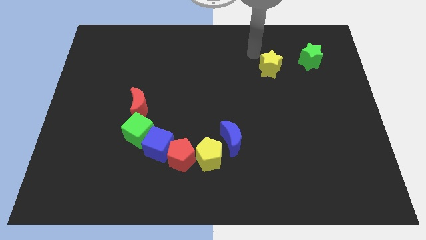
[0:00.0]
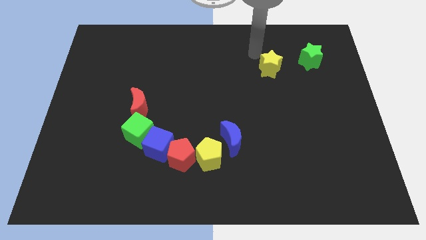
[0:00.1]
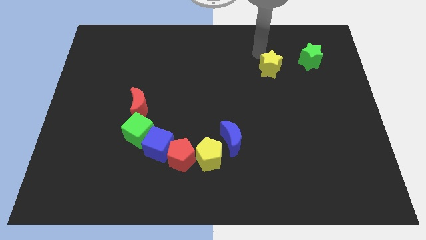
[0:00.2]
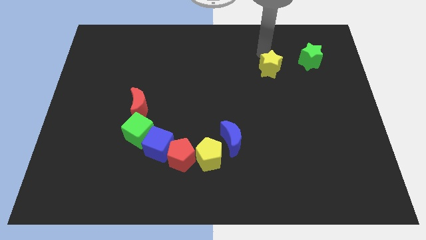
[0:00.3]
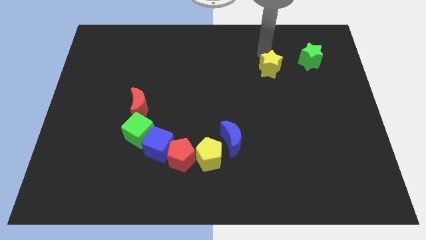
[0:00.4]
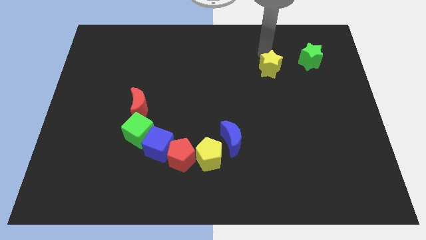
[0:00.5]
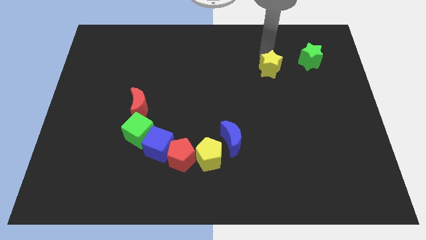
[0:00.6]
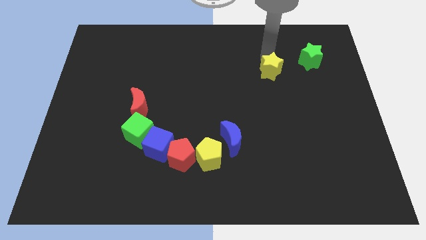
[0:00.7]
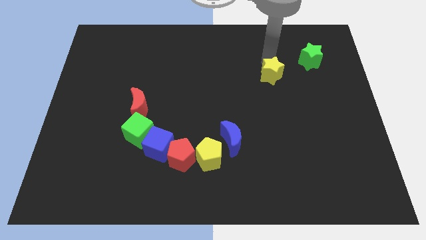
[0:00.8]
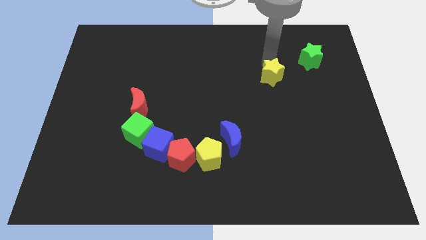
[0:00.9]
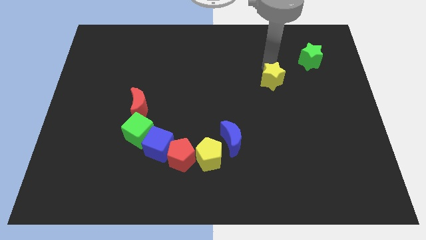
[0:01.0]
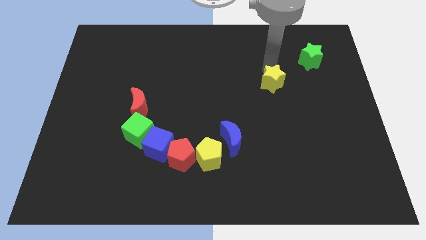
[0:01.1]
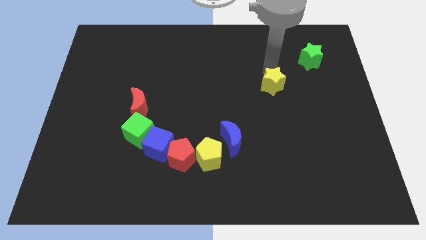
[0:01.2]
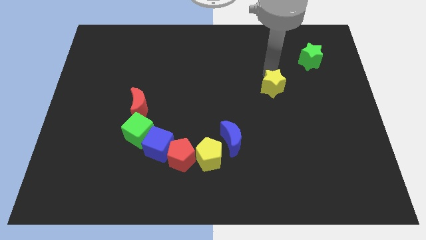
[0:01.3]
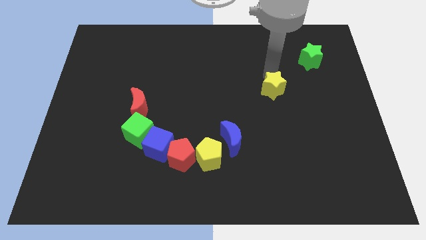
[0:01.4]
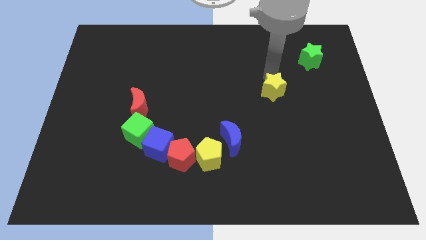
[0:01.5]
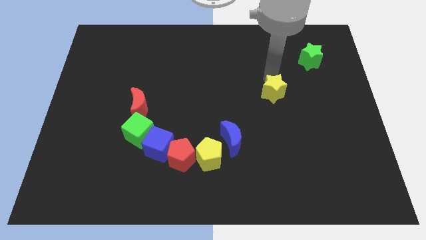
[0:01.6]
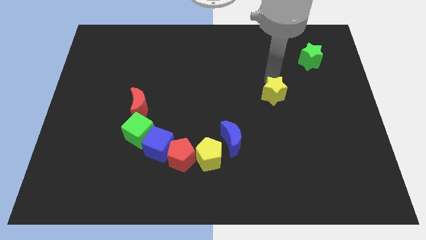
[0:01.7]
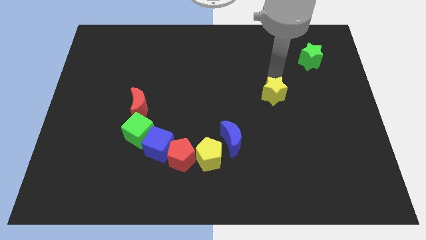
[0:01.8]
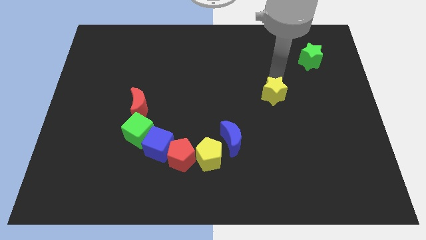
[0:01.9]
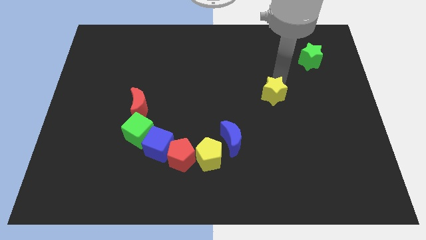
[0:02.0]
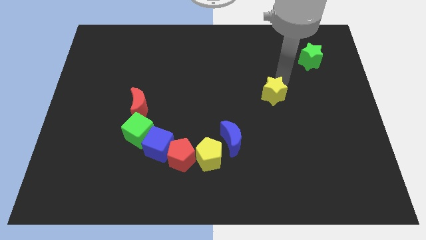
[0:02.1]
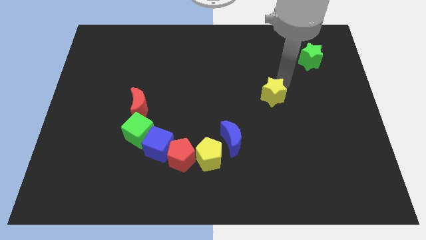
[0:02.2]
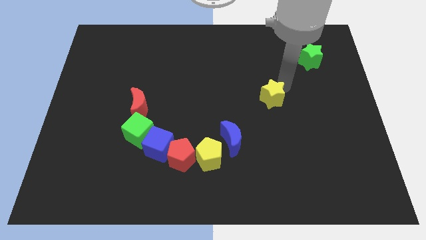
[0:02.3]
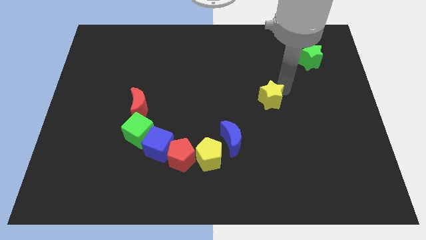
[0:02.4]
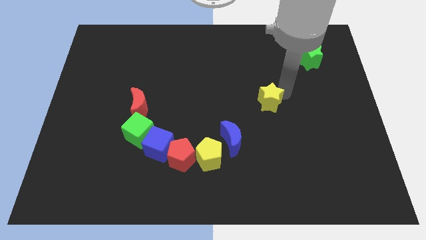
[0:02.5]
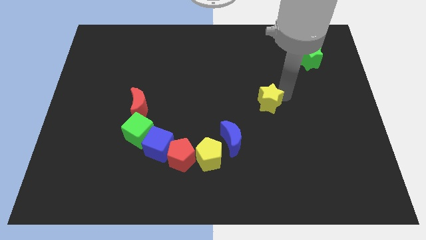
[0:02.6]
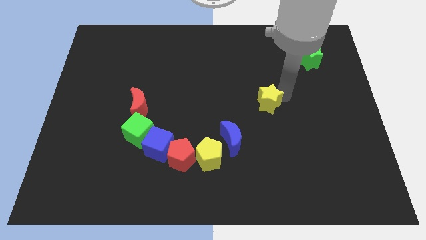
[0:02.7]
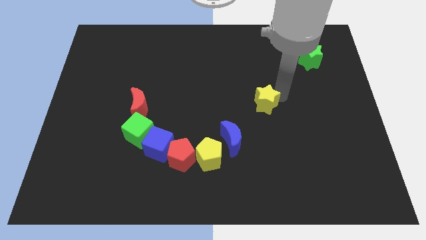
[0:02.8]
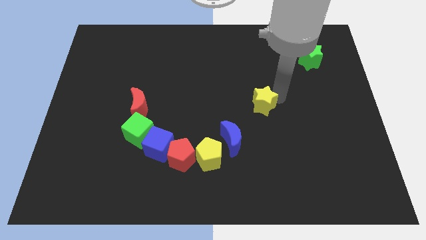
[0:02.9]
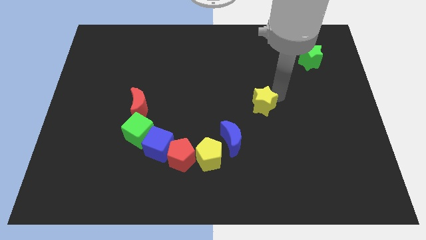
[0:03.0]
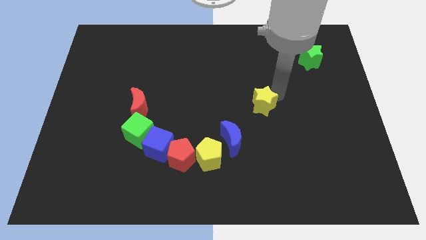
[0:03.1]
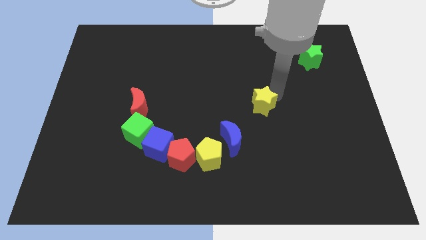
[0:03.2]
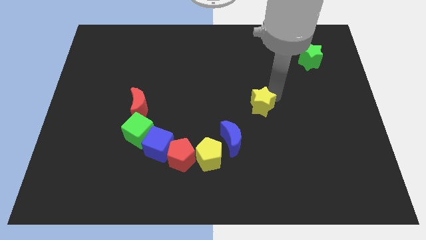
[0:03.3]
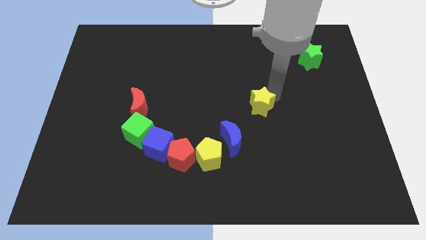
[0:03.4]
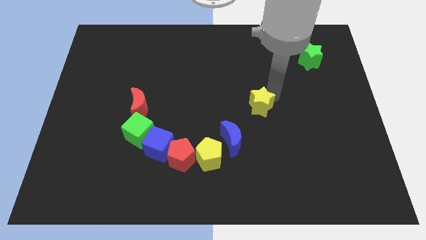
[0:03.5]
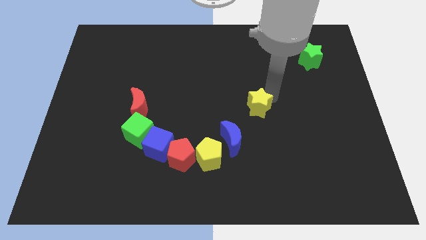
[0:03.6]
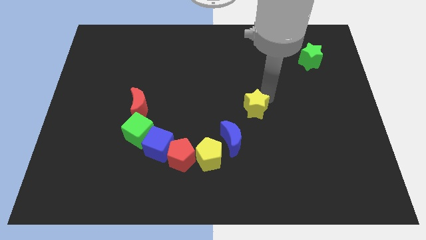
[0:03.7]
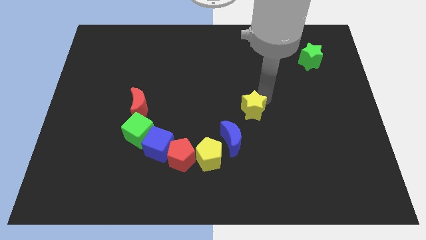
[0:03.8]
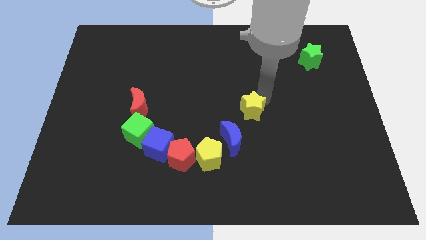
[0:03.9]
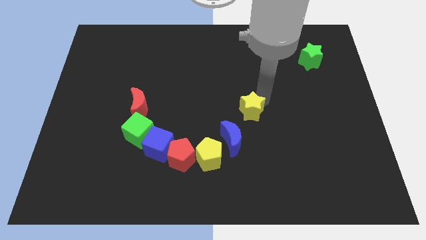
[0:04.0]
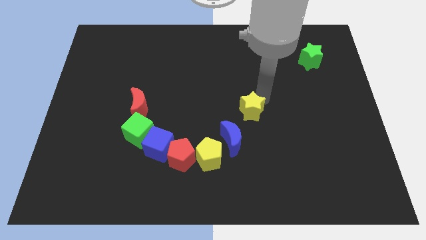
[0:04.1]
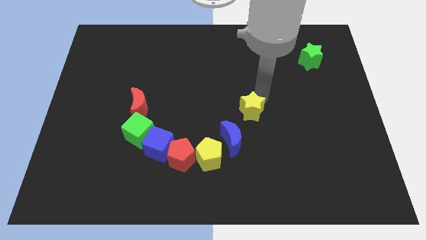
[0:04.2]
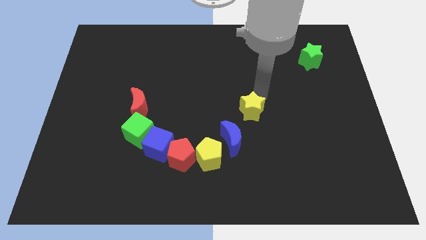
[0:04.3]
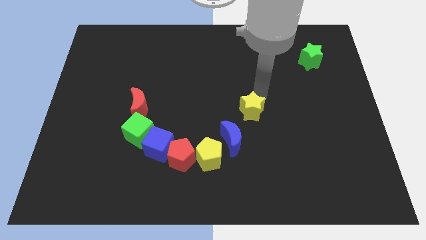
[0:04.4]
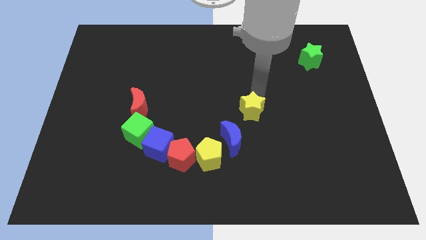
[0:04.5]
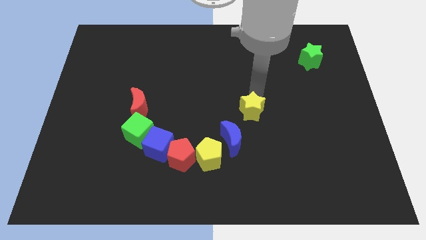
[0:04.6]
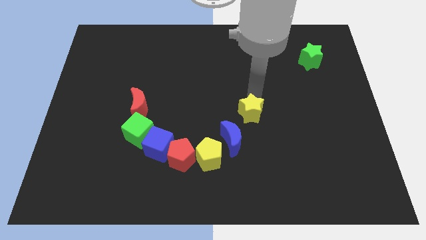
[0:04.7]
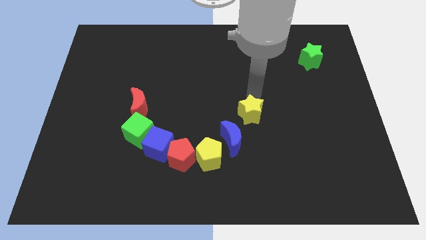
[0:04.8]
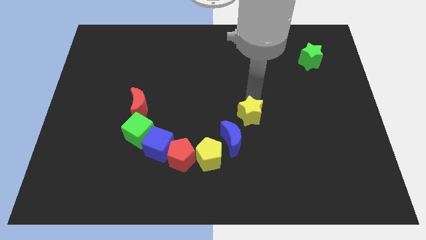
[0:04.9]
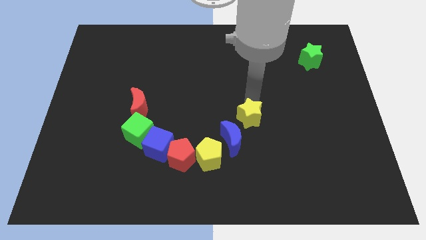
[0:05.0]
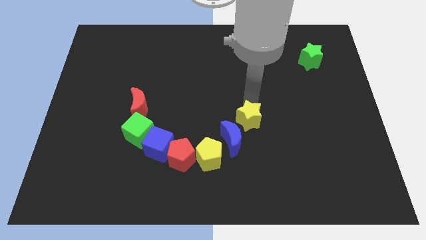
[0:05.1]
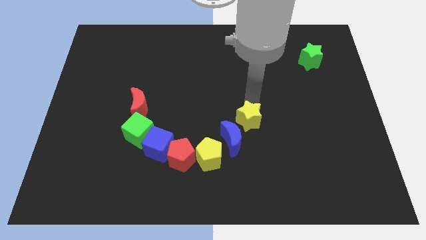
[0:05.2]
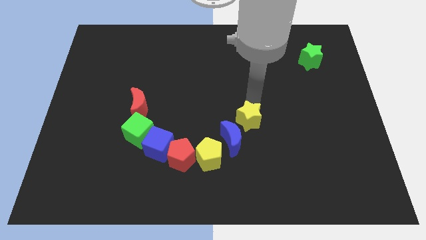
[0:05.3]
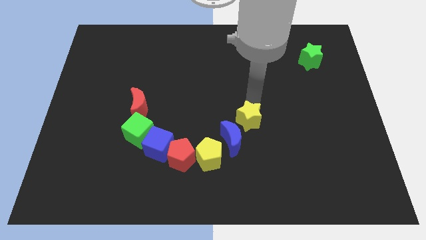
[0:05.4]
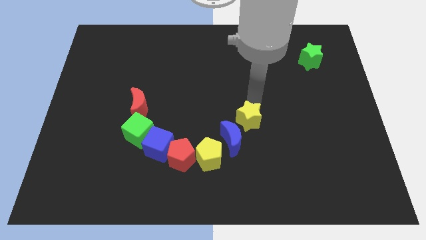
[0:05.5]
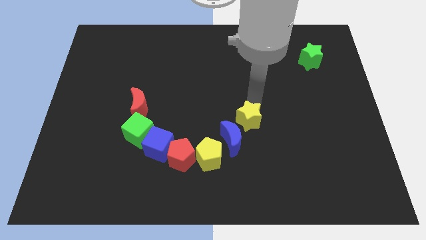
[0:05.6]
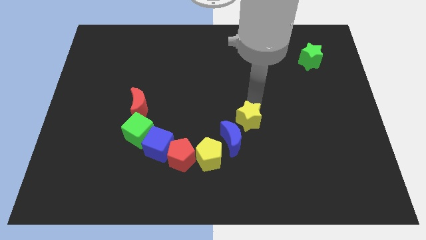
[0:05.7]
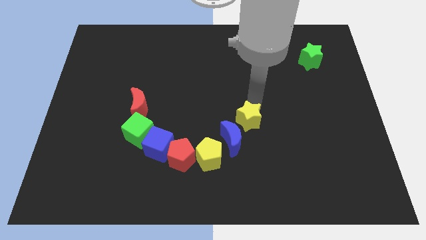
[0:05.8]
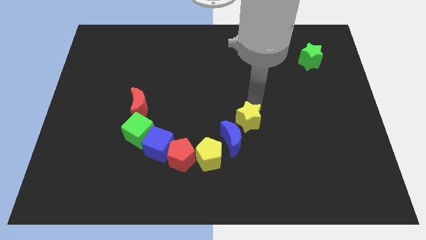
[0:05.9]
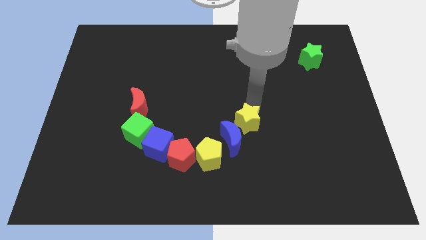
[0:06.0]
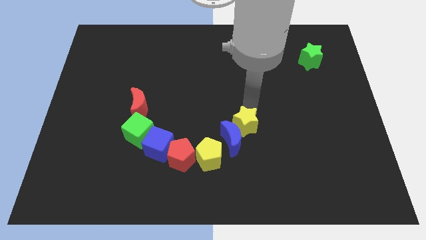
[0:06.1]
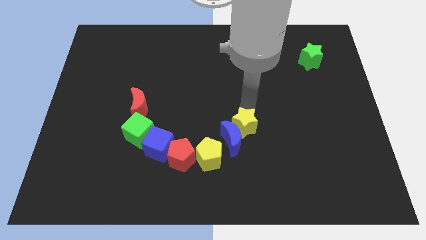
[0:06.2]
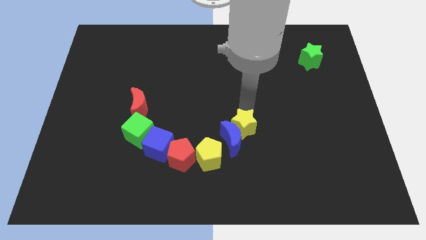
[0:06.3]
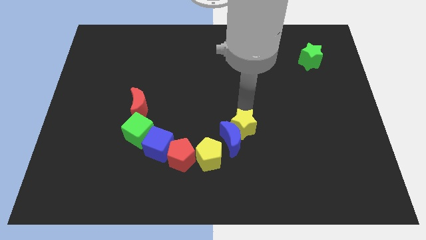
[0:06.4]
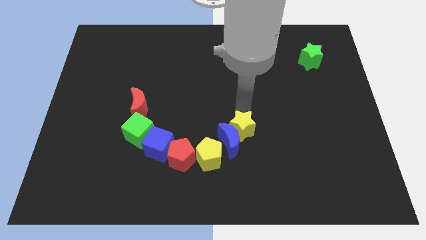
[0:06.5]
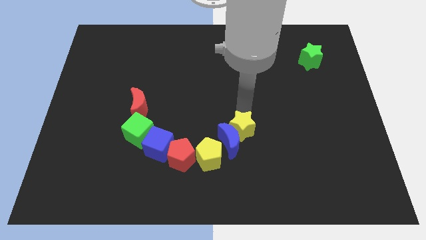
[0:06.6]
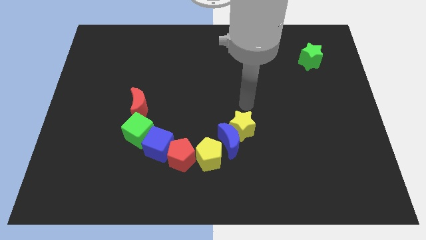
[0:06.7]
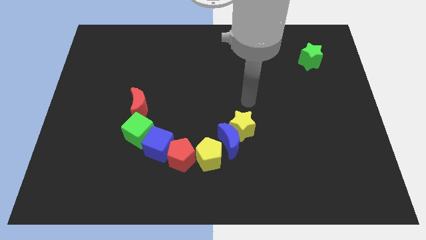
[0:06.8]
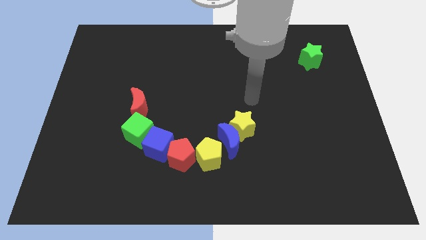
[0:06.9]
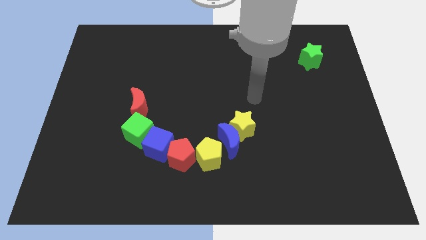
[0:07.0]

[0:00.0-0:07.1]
move yellow star into blue moon

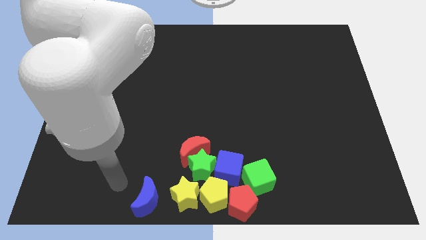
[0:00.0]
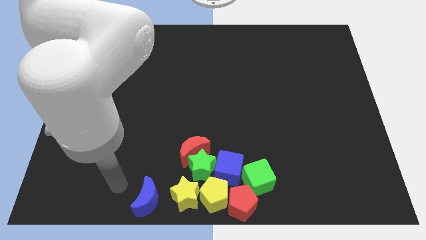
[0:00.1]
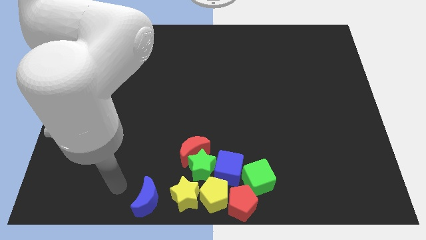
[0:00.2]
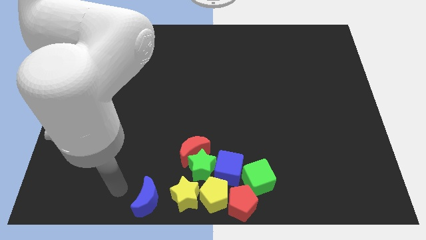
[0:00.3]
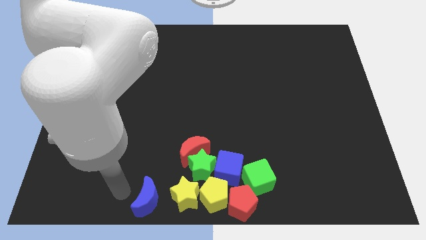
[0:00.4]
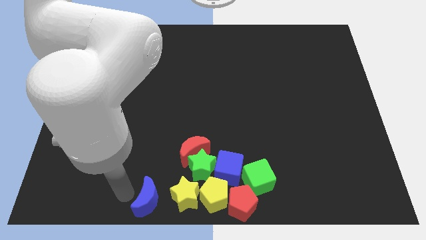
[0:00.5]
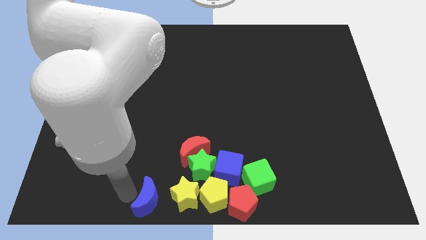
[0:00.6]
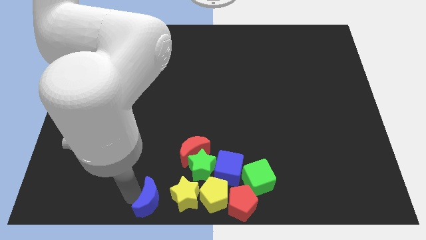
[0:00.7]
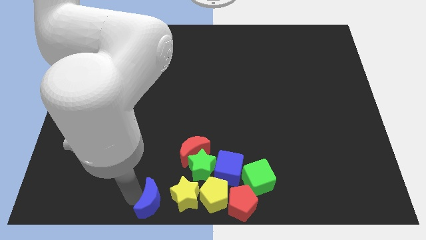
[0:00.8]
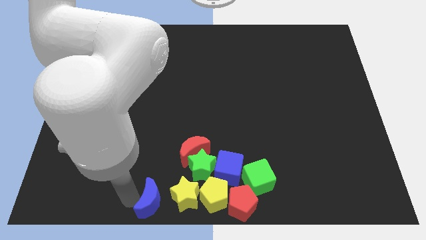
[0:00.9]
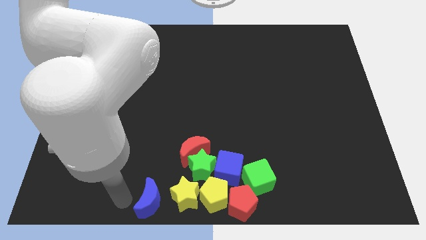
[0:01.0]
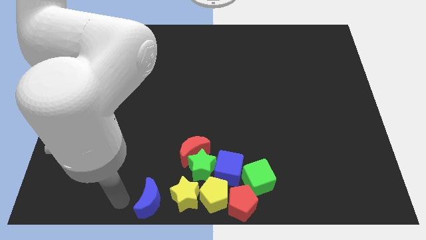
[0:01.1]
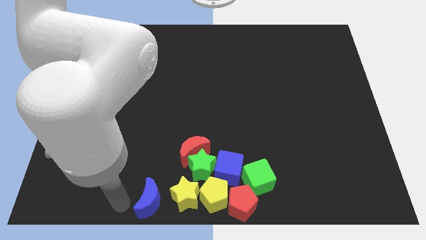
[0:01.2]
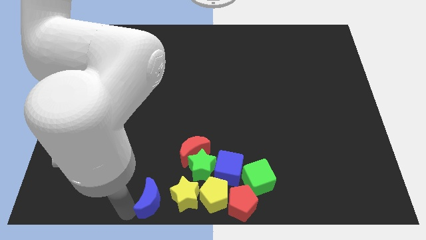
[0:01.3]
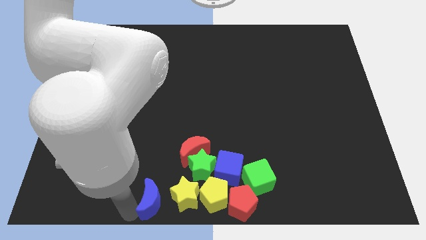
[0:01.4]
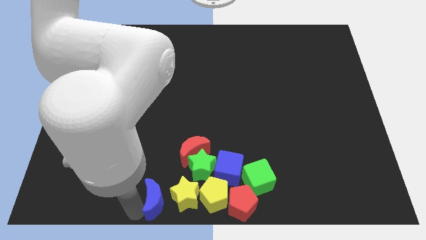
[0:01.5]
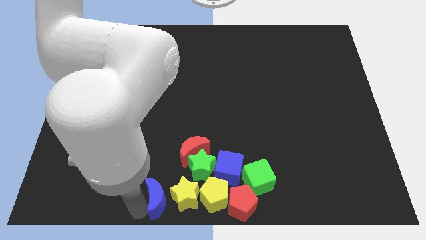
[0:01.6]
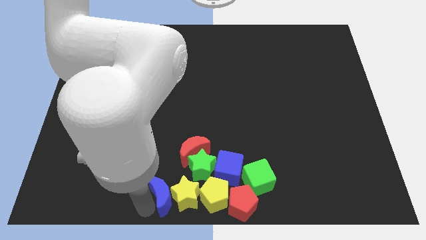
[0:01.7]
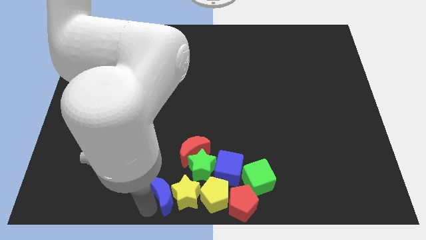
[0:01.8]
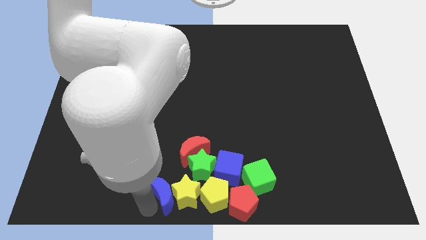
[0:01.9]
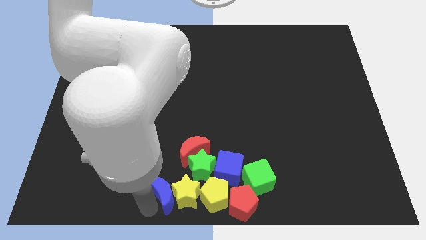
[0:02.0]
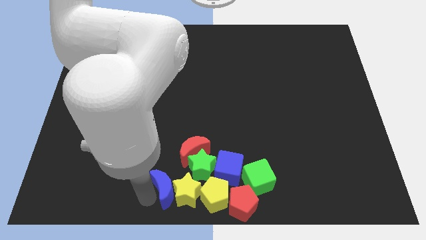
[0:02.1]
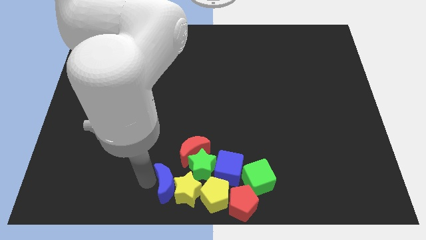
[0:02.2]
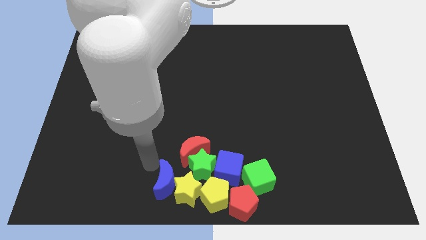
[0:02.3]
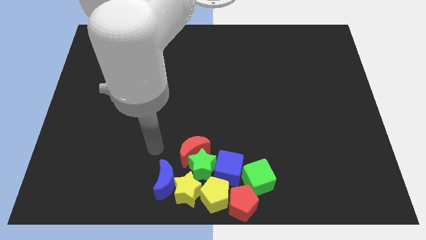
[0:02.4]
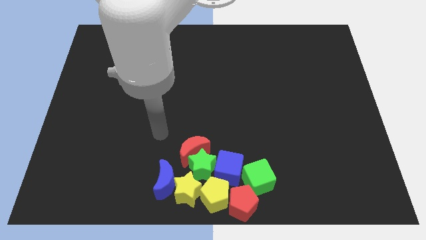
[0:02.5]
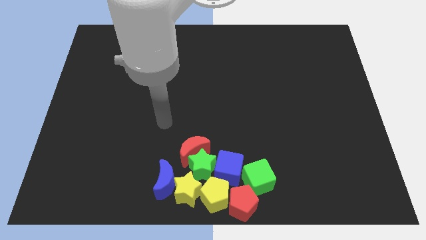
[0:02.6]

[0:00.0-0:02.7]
move the blue moon close to yellow star
